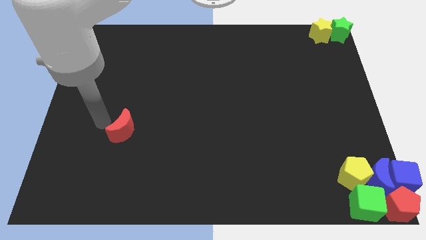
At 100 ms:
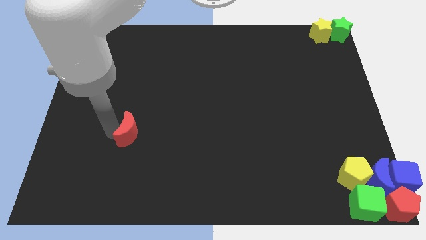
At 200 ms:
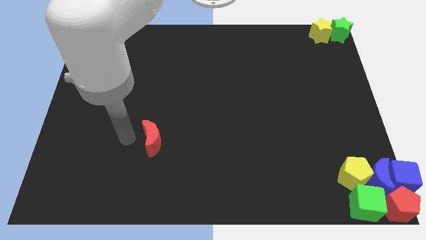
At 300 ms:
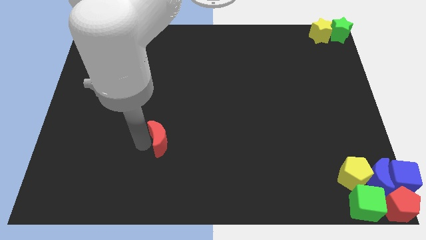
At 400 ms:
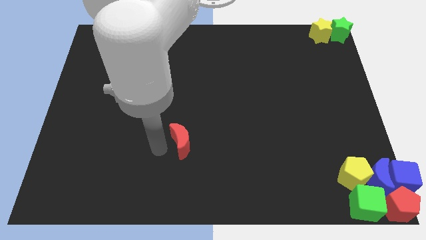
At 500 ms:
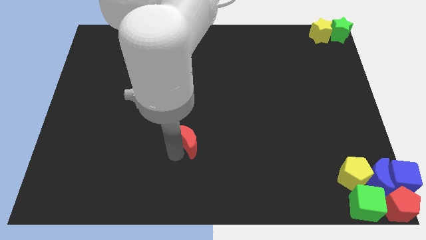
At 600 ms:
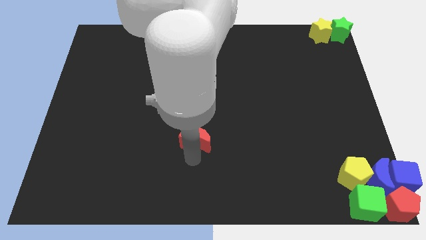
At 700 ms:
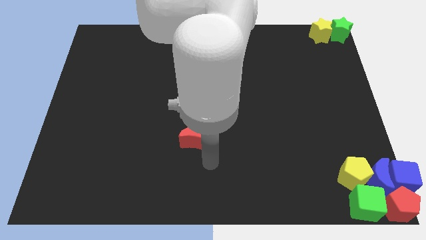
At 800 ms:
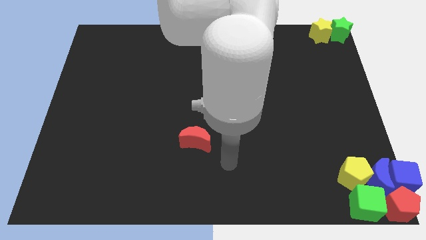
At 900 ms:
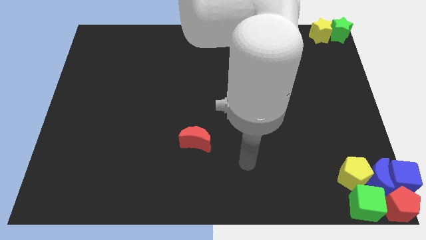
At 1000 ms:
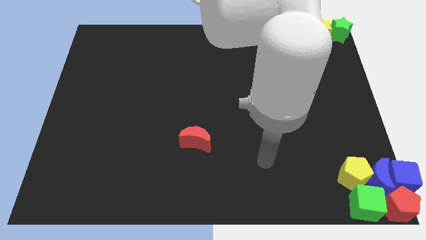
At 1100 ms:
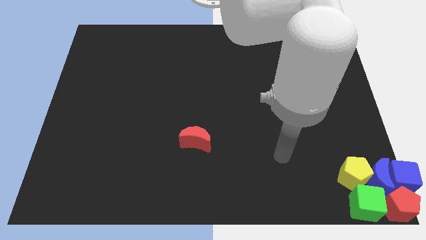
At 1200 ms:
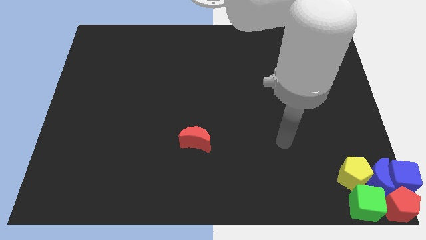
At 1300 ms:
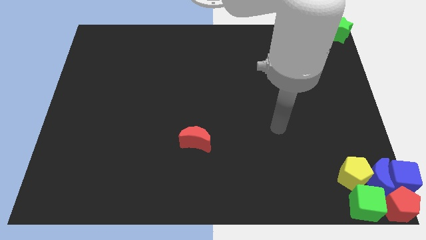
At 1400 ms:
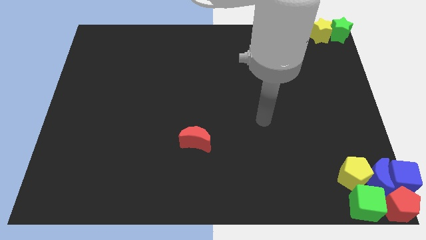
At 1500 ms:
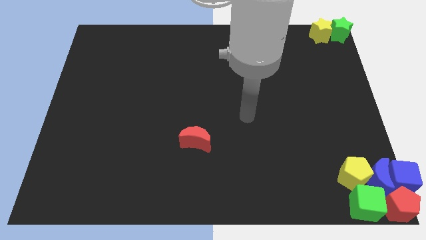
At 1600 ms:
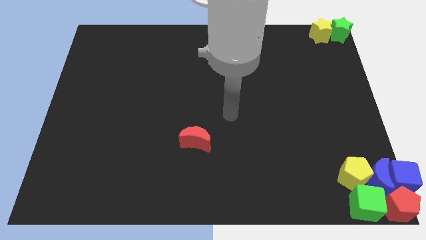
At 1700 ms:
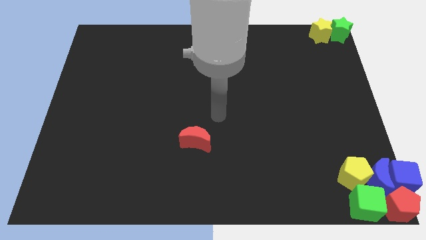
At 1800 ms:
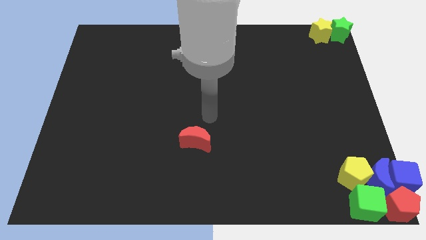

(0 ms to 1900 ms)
place the red crescent at the center of the board

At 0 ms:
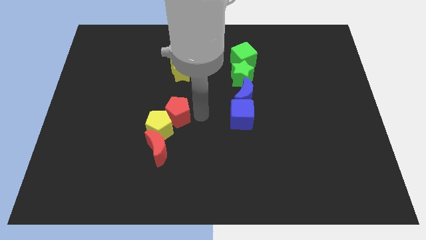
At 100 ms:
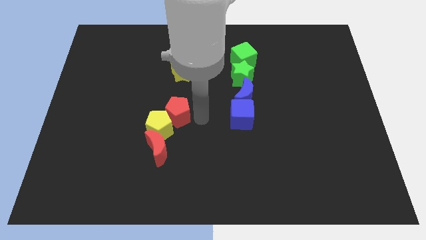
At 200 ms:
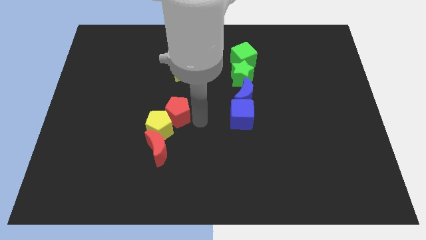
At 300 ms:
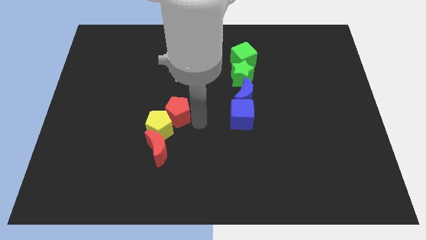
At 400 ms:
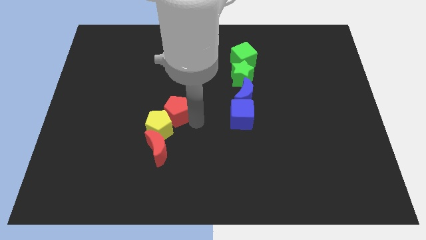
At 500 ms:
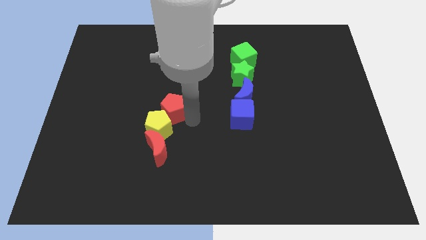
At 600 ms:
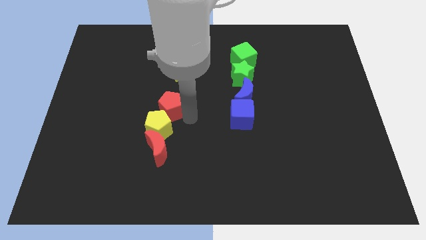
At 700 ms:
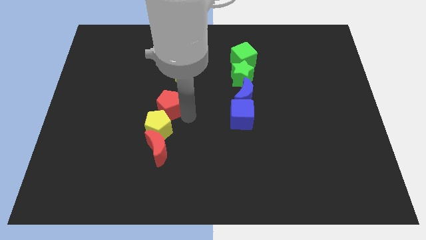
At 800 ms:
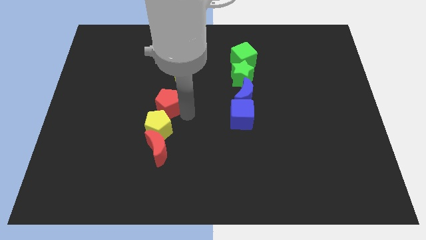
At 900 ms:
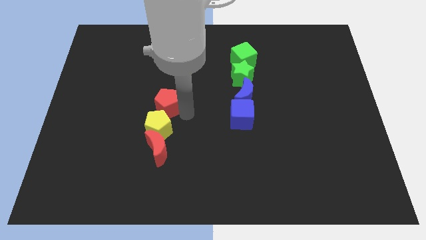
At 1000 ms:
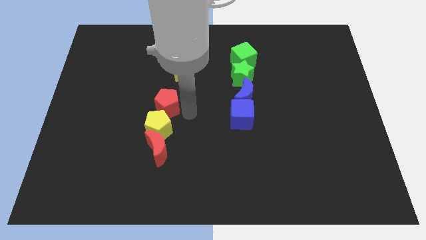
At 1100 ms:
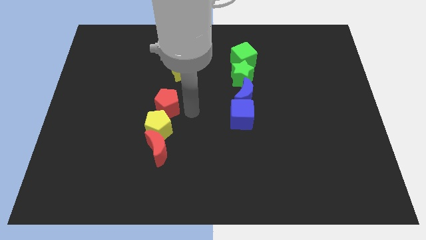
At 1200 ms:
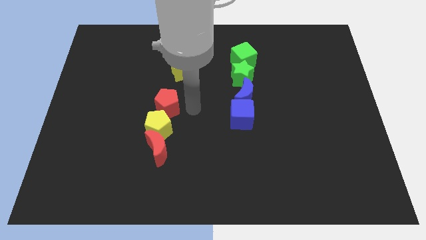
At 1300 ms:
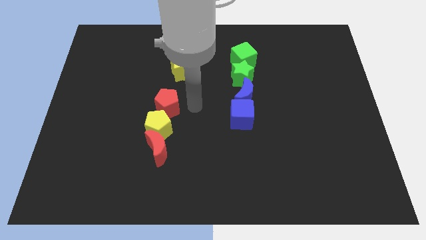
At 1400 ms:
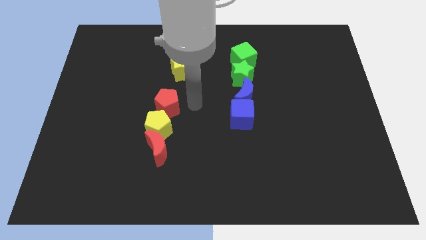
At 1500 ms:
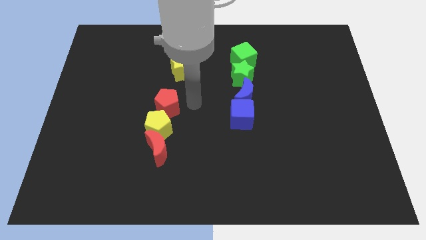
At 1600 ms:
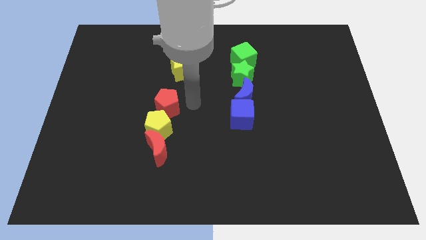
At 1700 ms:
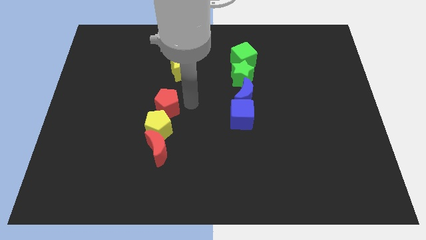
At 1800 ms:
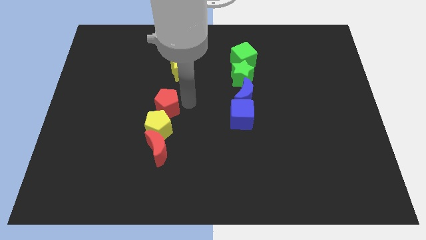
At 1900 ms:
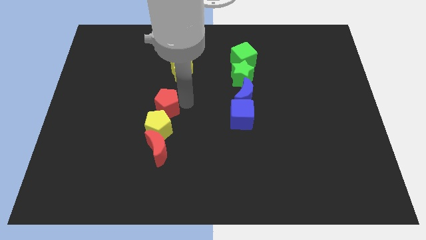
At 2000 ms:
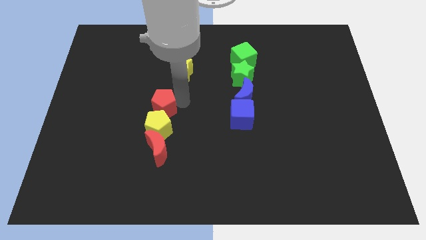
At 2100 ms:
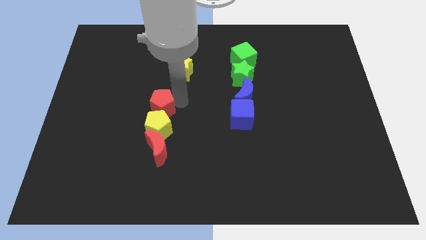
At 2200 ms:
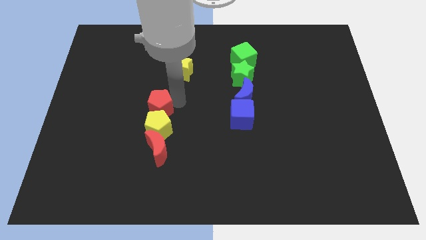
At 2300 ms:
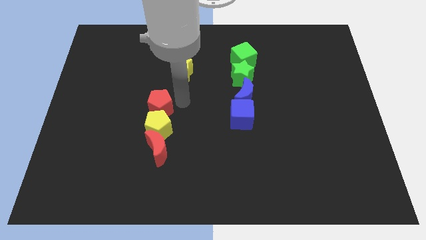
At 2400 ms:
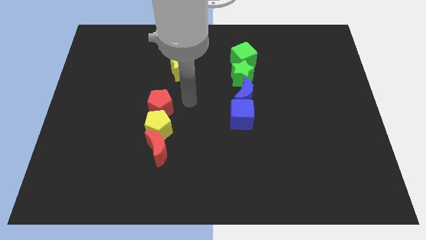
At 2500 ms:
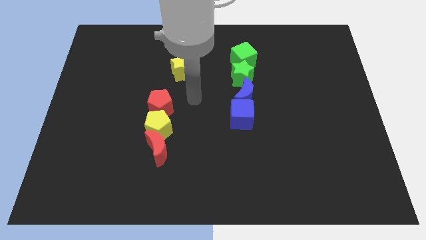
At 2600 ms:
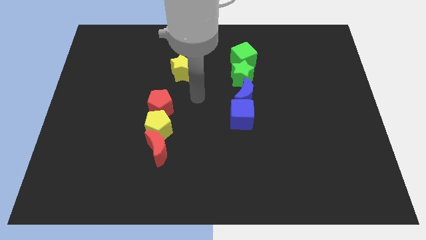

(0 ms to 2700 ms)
put the red pentagon above the yellow pentagon to form a vertical line of blocks

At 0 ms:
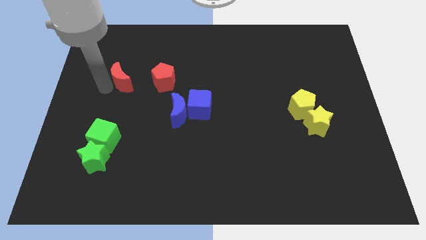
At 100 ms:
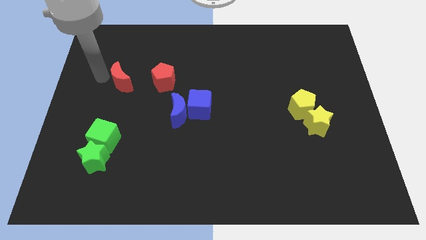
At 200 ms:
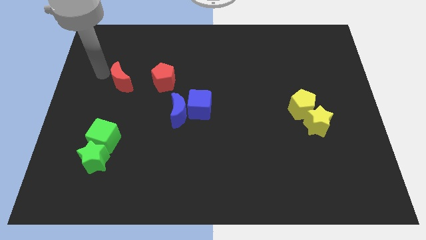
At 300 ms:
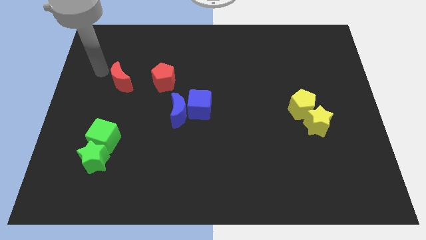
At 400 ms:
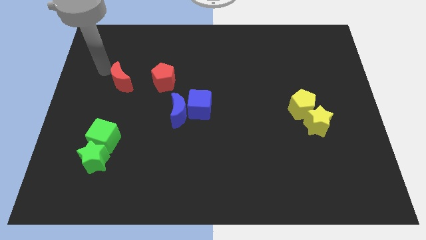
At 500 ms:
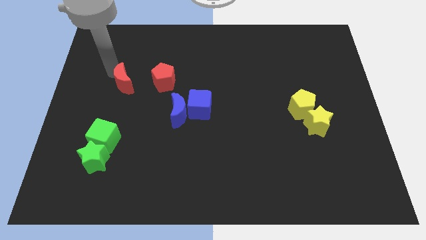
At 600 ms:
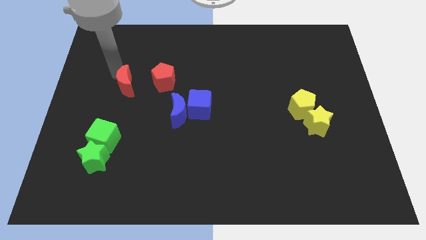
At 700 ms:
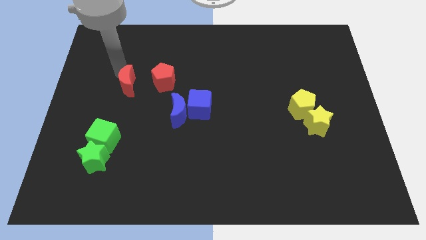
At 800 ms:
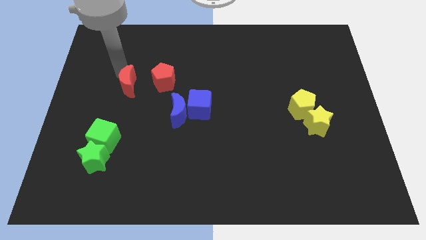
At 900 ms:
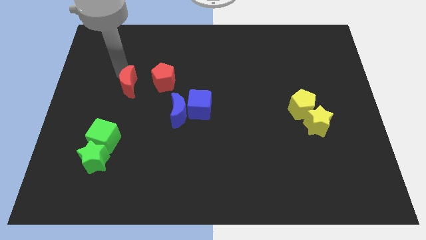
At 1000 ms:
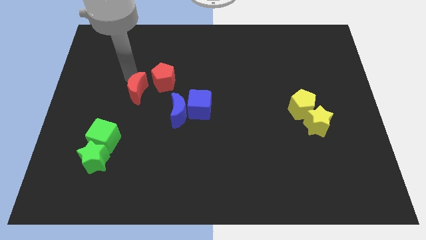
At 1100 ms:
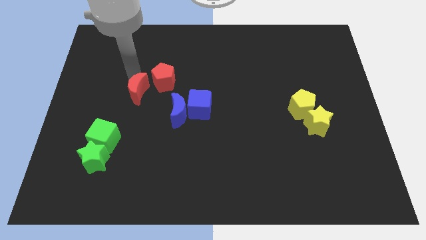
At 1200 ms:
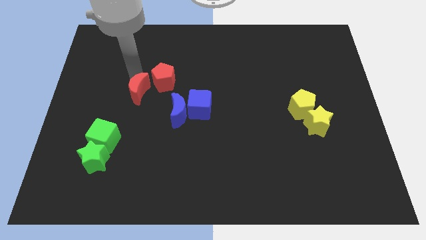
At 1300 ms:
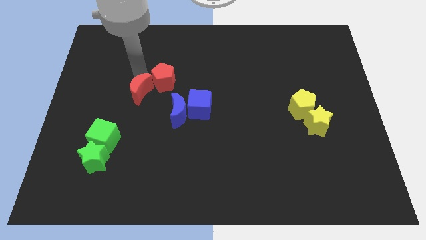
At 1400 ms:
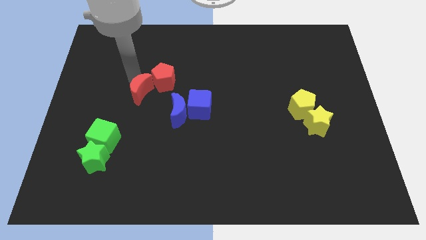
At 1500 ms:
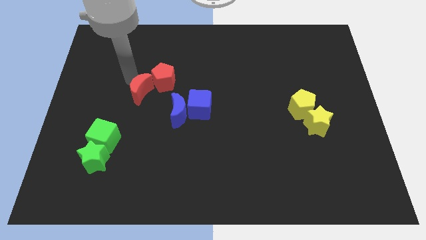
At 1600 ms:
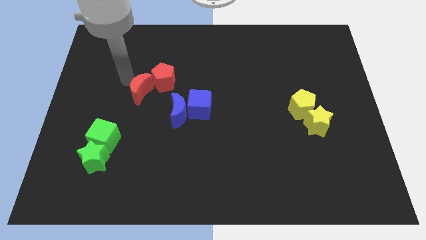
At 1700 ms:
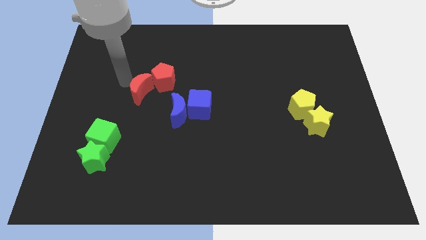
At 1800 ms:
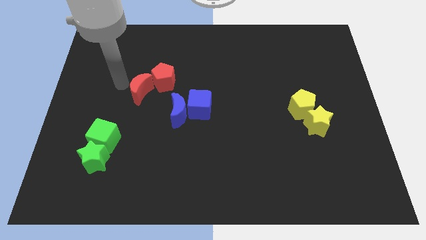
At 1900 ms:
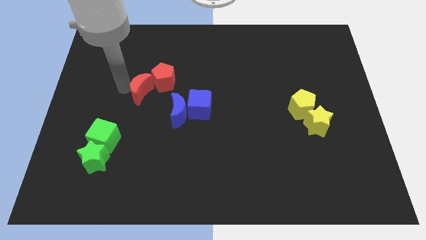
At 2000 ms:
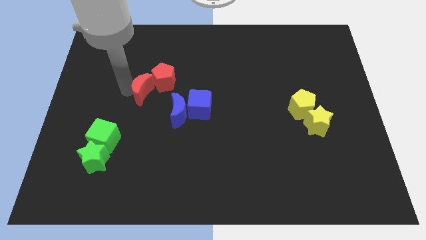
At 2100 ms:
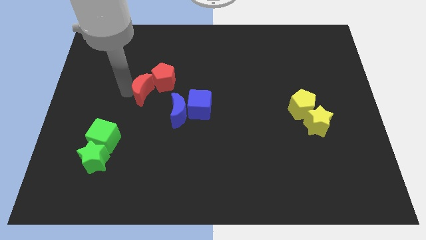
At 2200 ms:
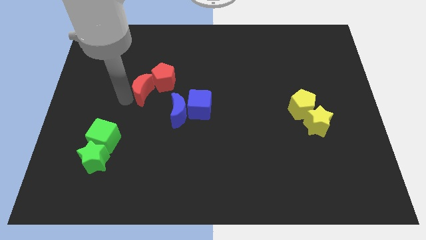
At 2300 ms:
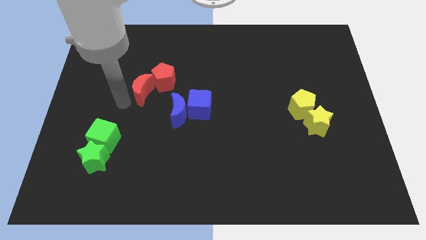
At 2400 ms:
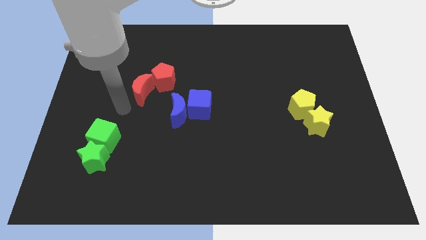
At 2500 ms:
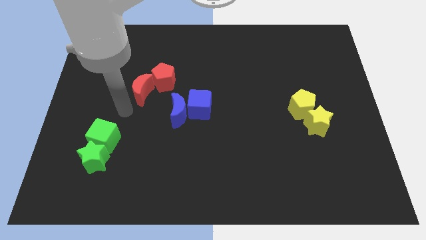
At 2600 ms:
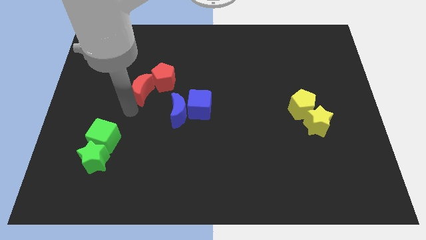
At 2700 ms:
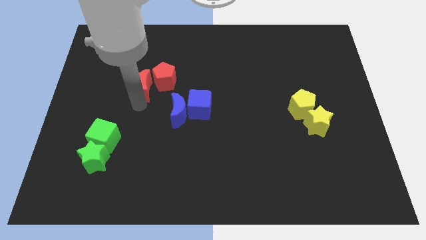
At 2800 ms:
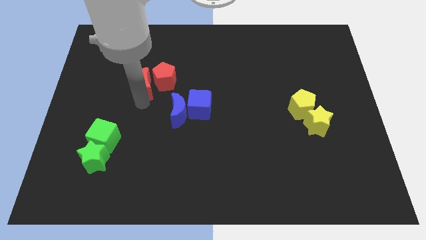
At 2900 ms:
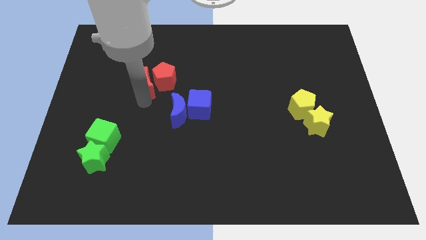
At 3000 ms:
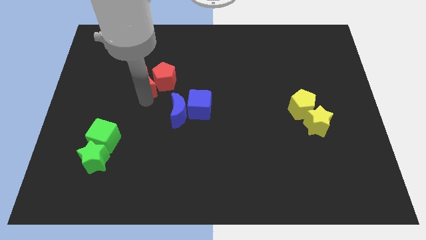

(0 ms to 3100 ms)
place red crescent on the left side of the red pentagon

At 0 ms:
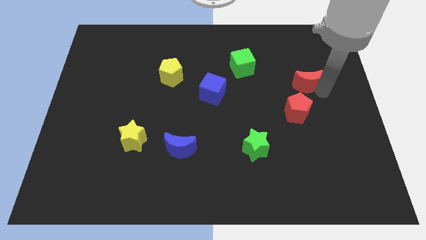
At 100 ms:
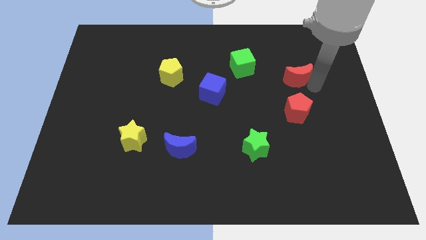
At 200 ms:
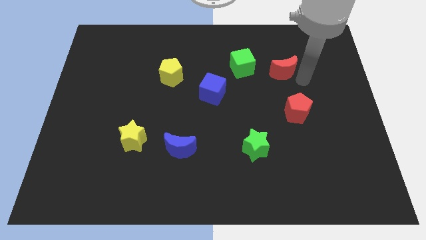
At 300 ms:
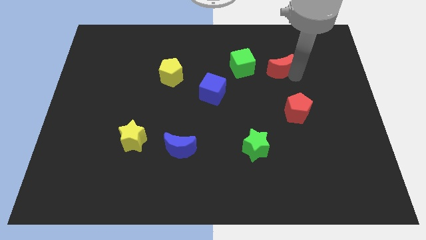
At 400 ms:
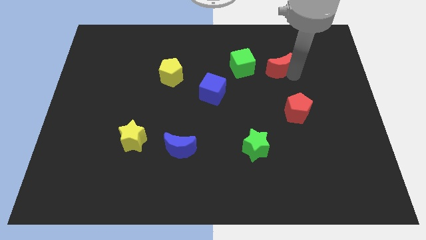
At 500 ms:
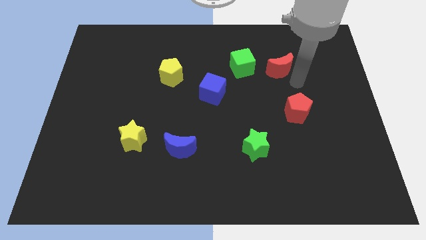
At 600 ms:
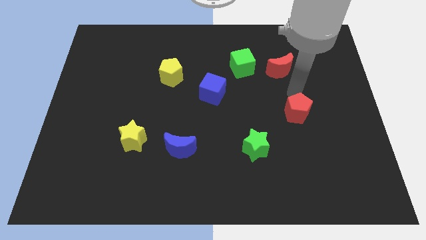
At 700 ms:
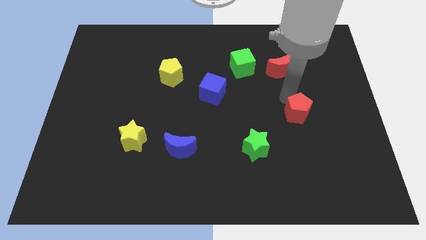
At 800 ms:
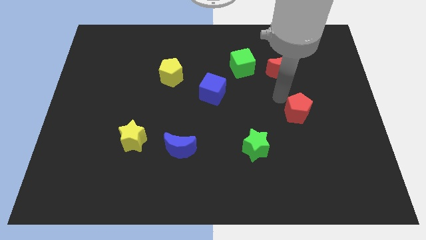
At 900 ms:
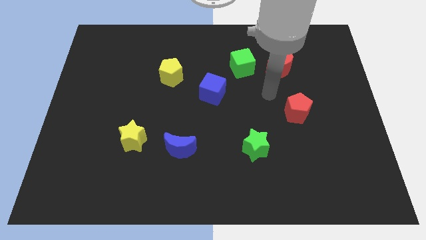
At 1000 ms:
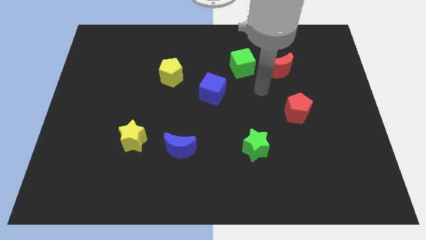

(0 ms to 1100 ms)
move your arm close to red moon

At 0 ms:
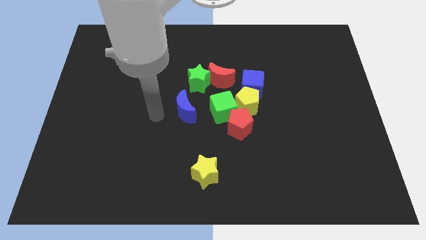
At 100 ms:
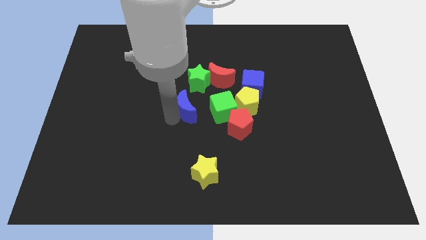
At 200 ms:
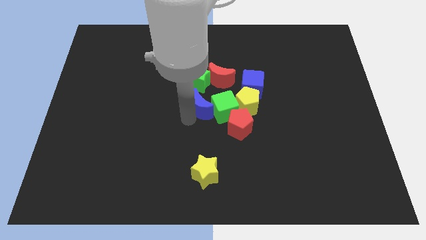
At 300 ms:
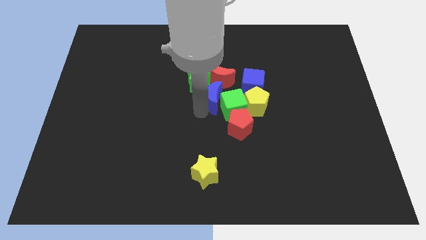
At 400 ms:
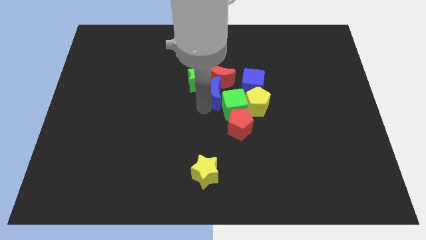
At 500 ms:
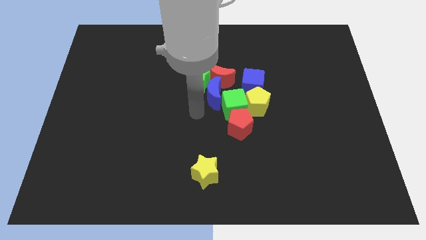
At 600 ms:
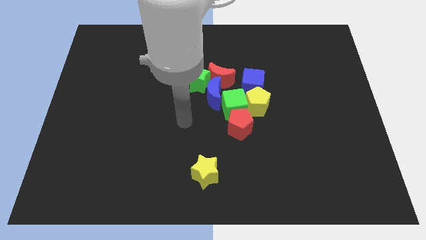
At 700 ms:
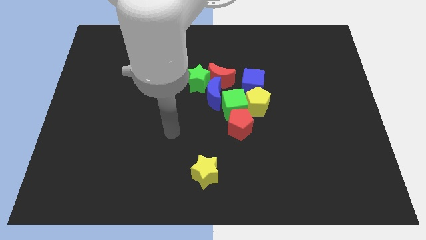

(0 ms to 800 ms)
push the blue crescent into the green cube
